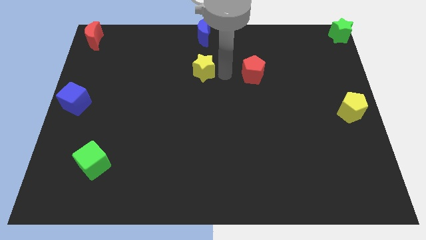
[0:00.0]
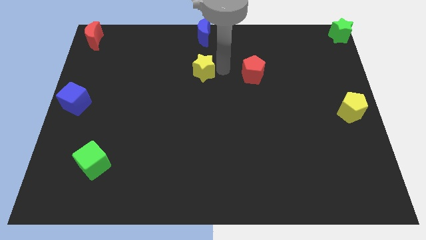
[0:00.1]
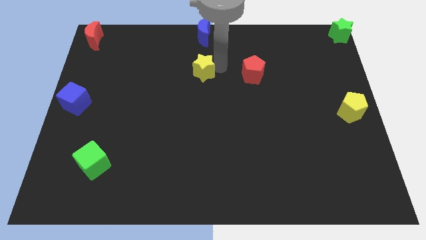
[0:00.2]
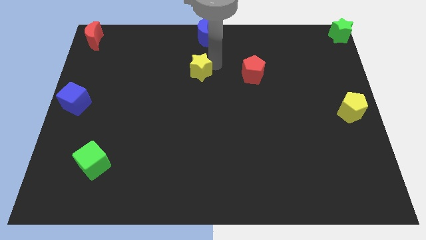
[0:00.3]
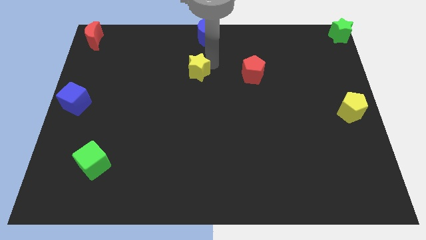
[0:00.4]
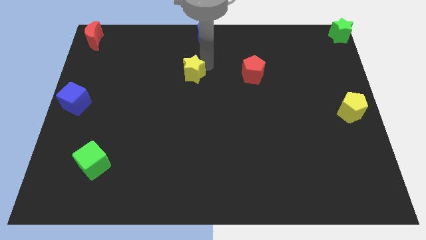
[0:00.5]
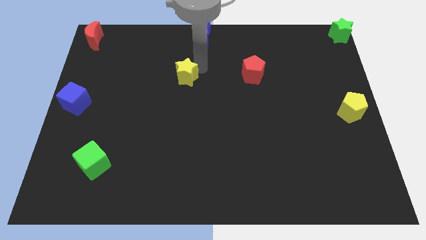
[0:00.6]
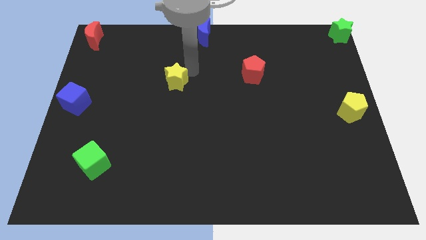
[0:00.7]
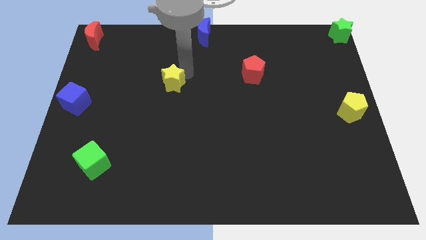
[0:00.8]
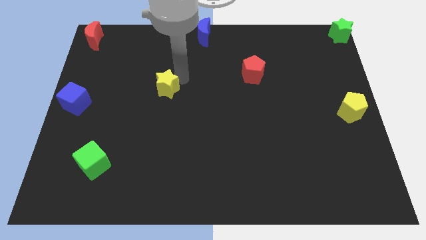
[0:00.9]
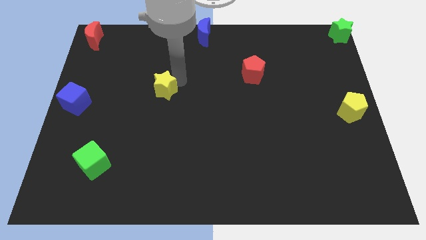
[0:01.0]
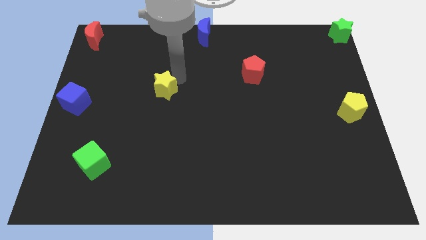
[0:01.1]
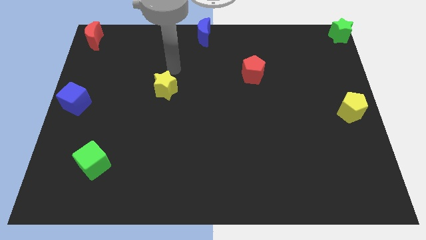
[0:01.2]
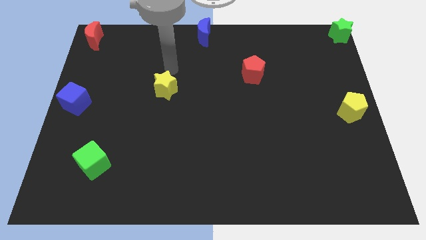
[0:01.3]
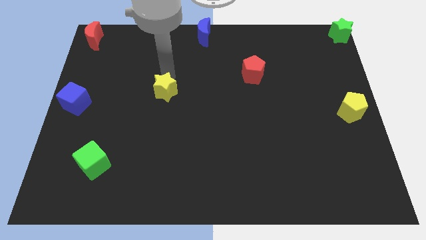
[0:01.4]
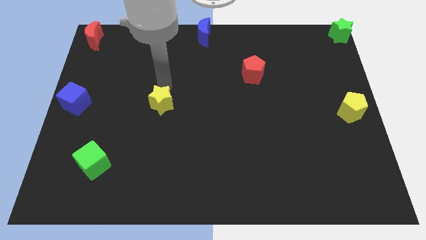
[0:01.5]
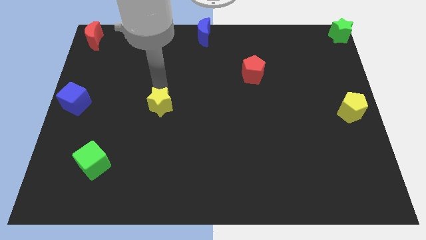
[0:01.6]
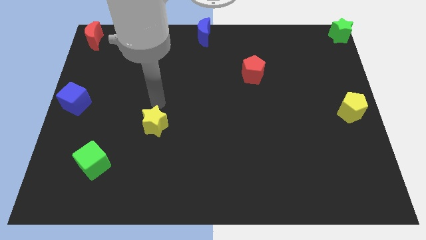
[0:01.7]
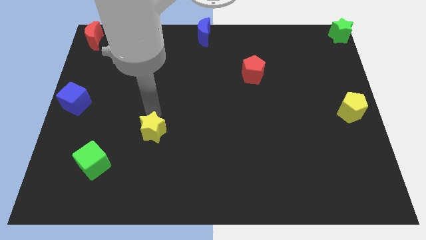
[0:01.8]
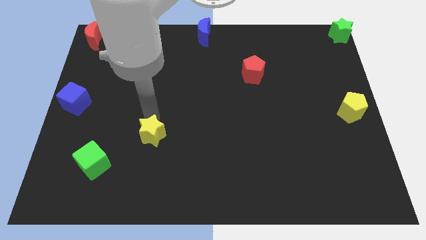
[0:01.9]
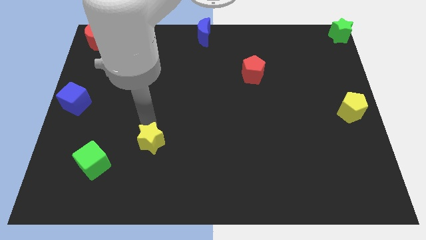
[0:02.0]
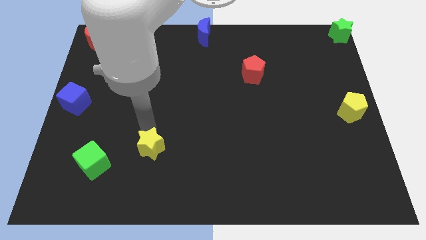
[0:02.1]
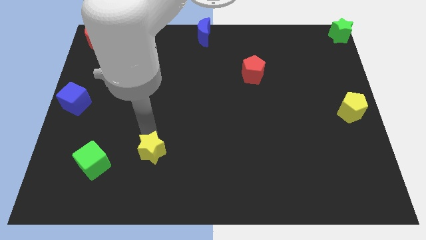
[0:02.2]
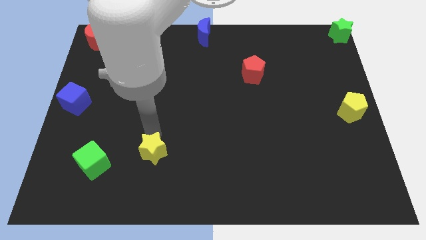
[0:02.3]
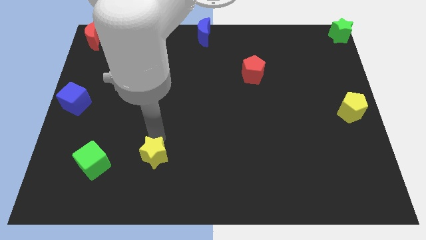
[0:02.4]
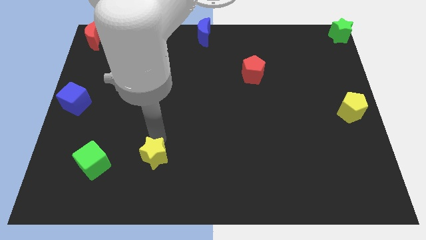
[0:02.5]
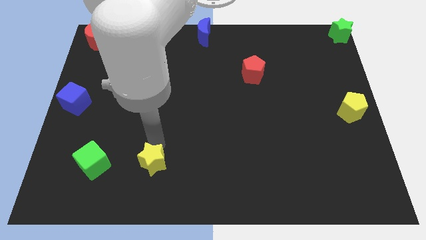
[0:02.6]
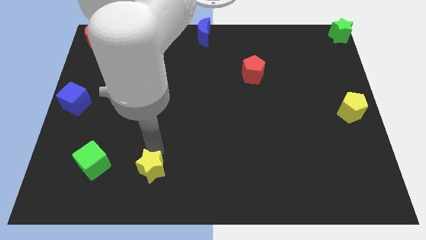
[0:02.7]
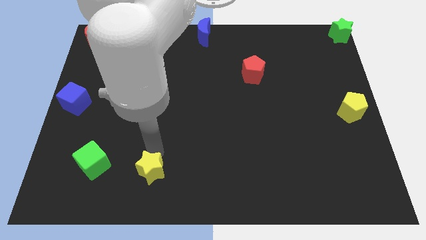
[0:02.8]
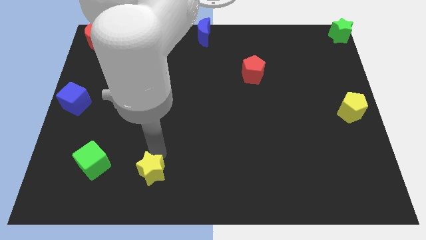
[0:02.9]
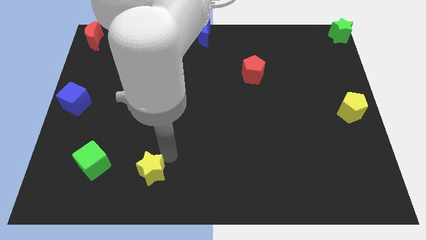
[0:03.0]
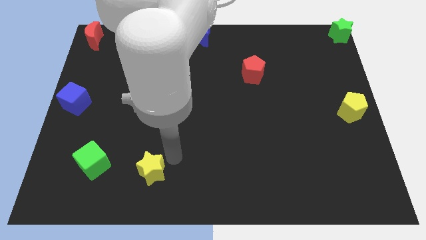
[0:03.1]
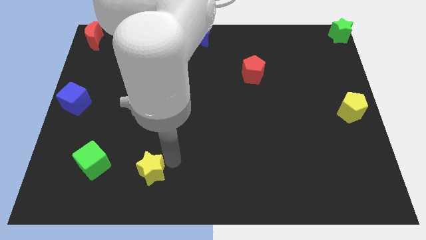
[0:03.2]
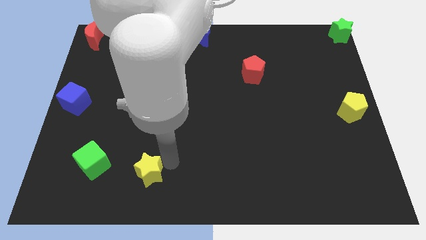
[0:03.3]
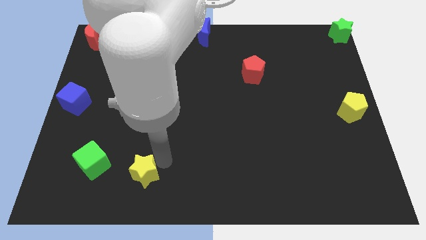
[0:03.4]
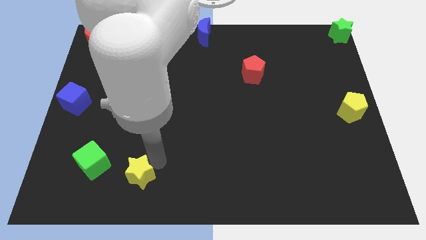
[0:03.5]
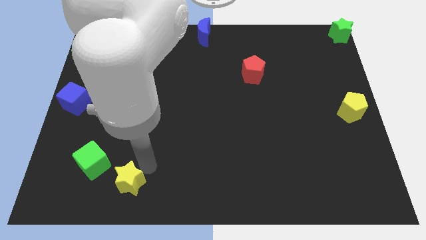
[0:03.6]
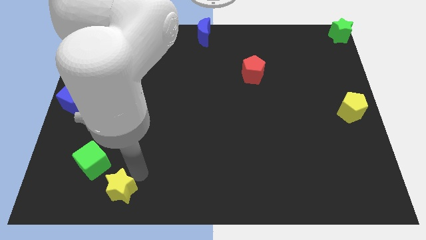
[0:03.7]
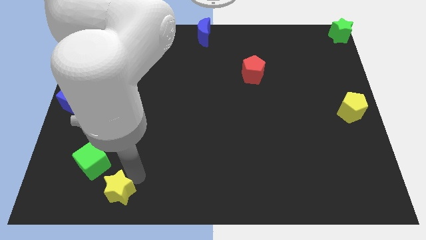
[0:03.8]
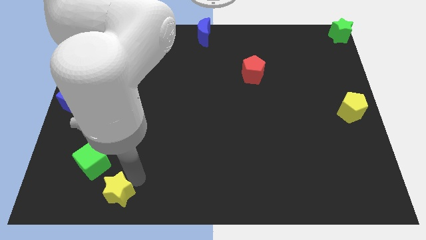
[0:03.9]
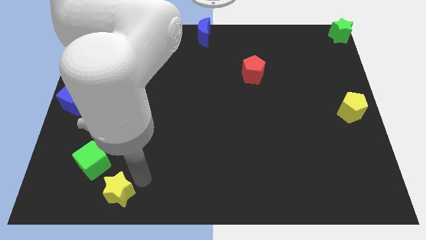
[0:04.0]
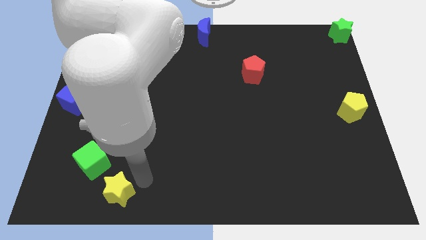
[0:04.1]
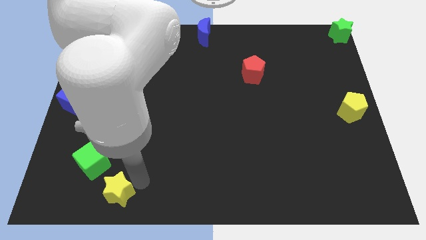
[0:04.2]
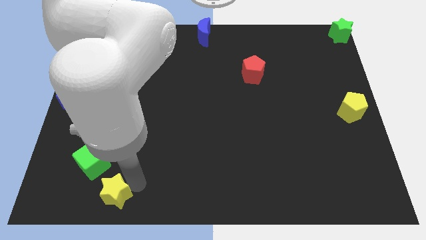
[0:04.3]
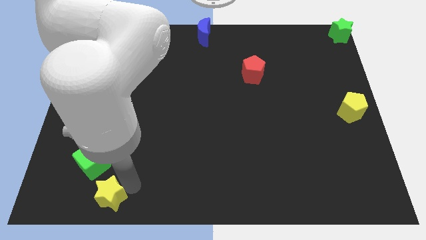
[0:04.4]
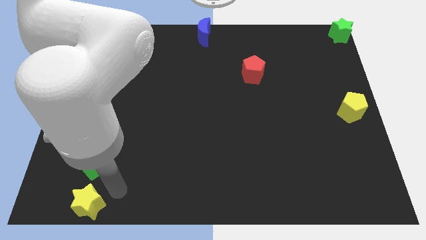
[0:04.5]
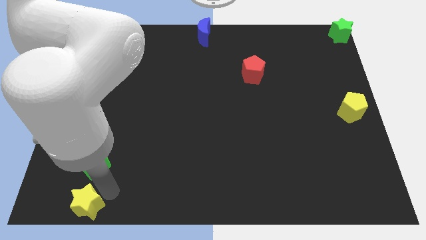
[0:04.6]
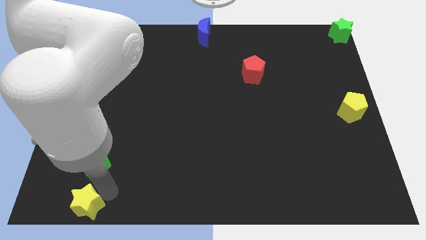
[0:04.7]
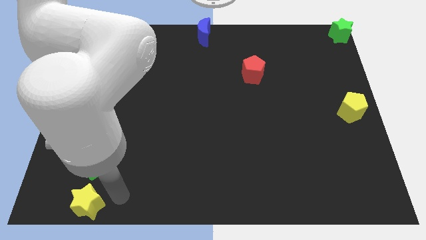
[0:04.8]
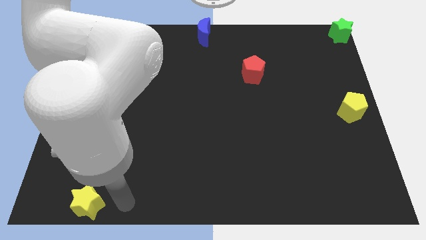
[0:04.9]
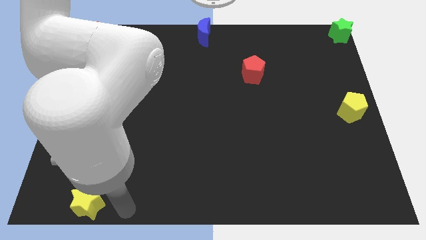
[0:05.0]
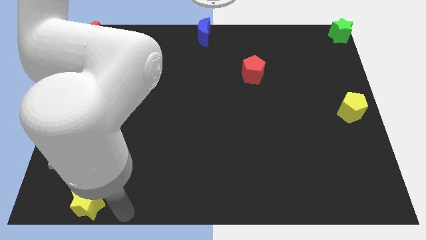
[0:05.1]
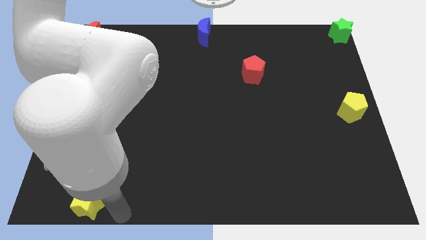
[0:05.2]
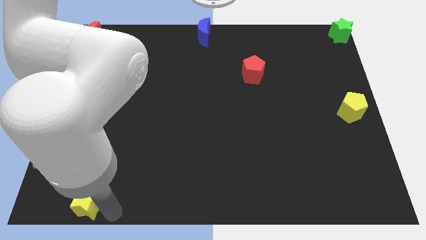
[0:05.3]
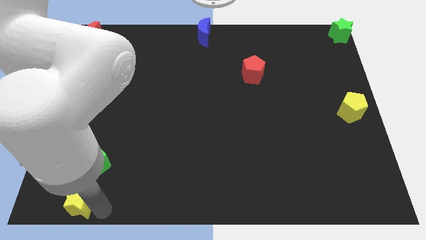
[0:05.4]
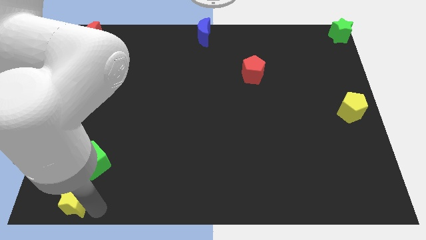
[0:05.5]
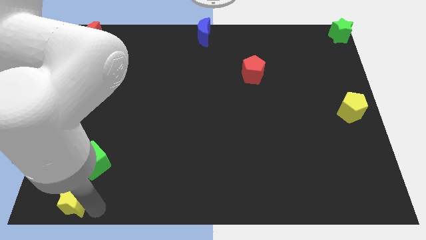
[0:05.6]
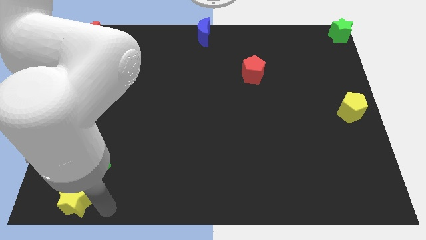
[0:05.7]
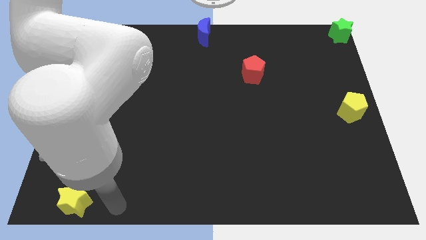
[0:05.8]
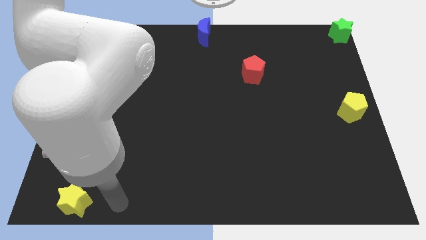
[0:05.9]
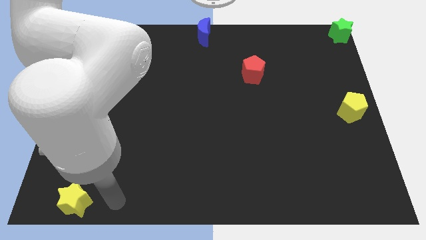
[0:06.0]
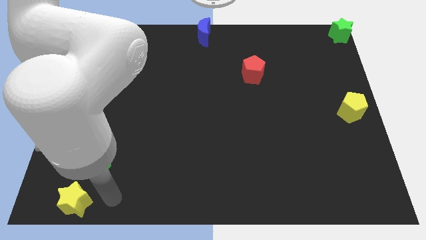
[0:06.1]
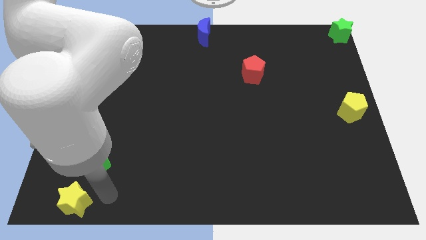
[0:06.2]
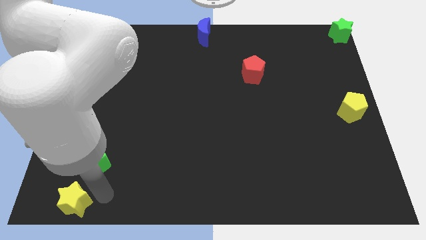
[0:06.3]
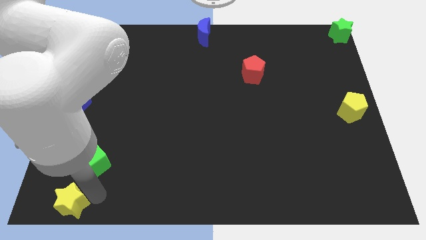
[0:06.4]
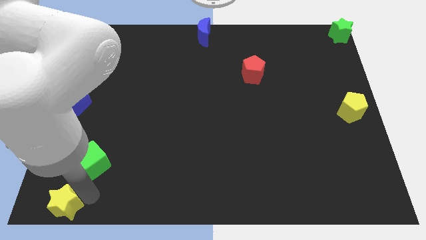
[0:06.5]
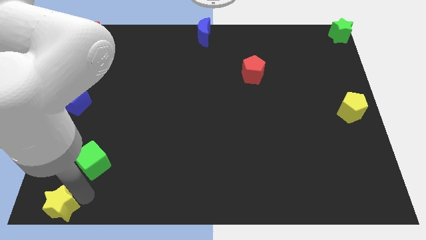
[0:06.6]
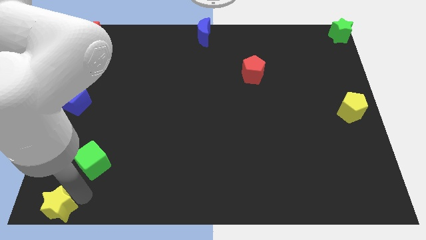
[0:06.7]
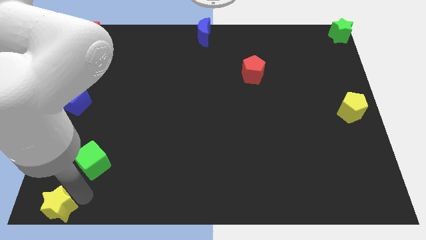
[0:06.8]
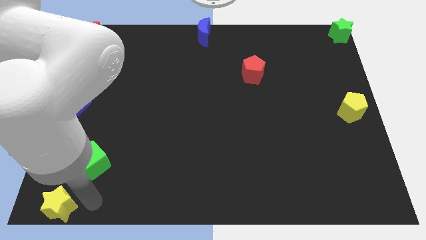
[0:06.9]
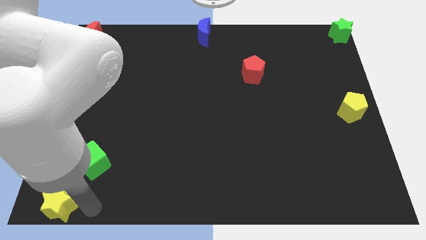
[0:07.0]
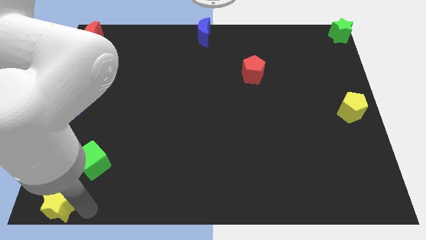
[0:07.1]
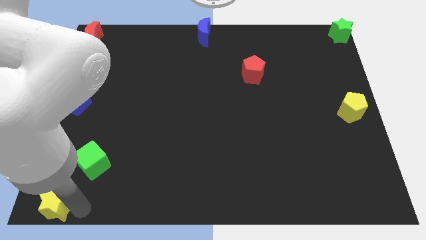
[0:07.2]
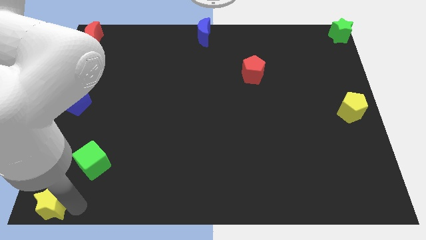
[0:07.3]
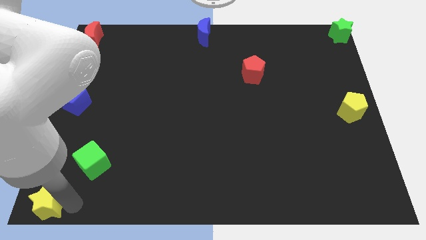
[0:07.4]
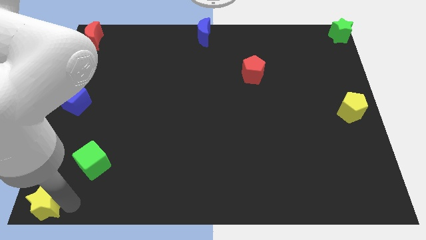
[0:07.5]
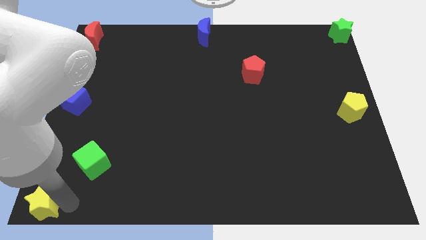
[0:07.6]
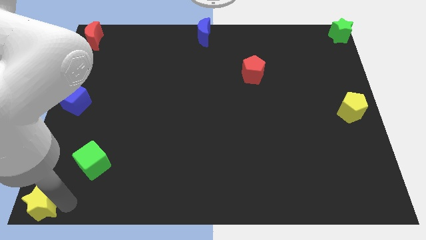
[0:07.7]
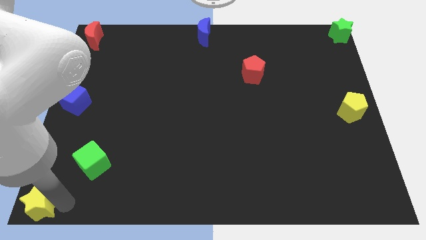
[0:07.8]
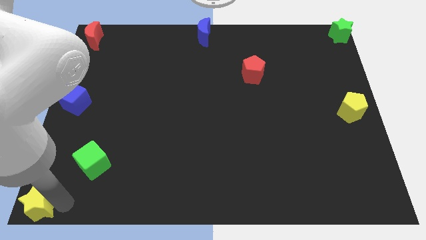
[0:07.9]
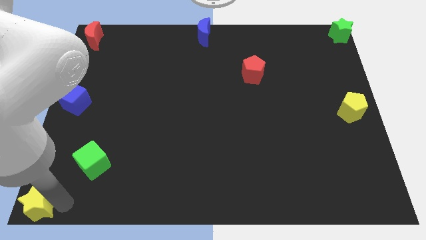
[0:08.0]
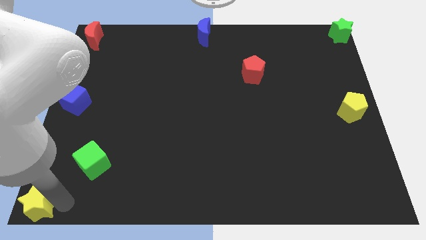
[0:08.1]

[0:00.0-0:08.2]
push the yellow star to the bottom left corner

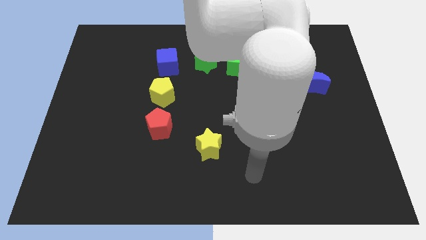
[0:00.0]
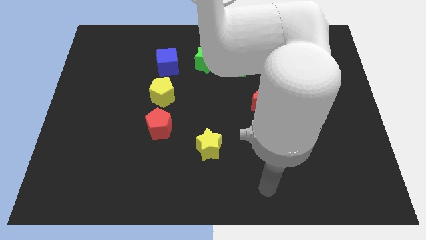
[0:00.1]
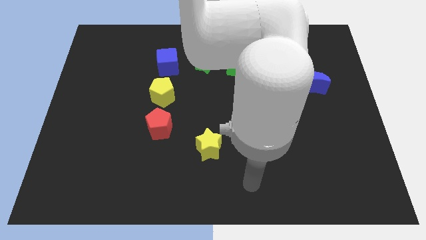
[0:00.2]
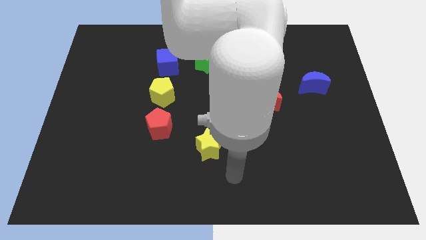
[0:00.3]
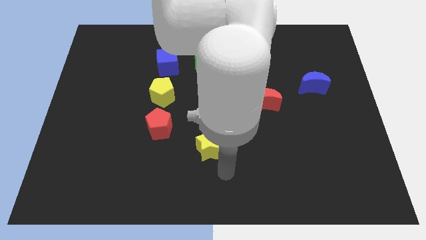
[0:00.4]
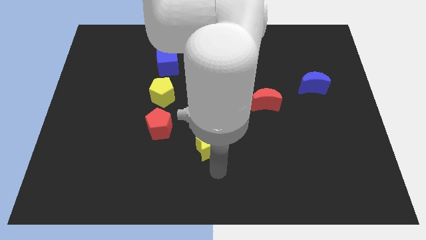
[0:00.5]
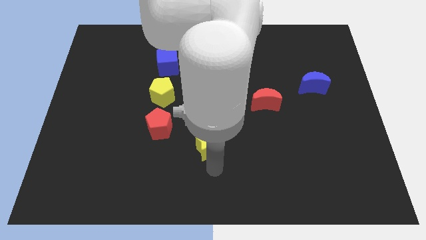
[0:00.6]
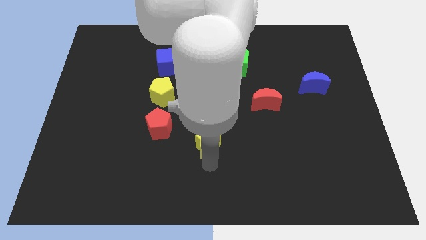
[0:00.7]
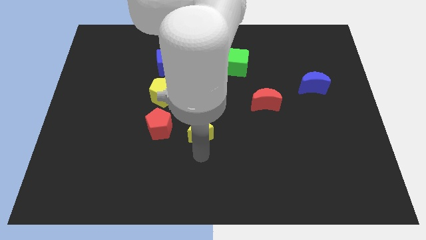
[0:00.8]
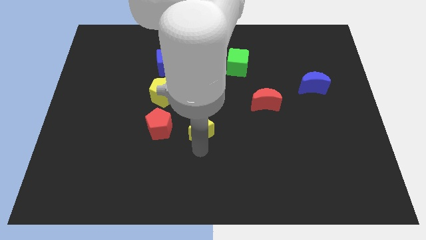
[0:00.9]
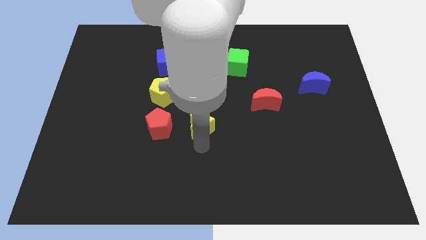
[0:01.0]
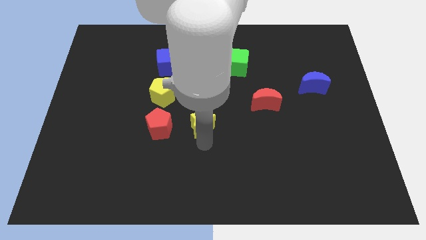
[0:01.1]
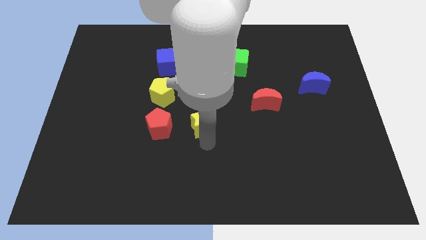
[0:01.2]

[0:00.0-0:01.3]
put yellow star right to the red pentagon
